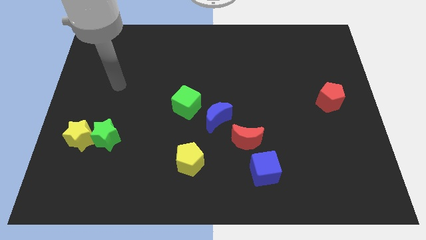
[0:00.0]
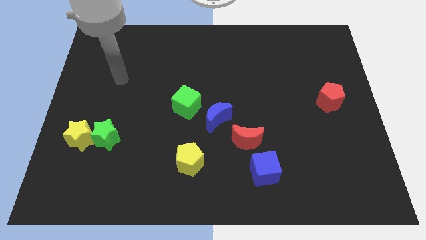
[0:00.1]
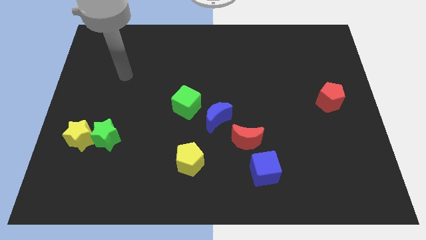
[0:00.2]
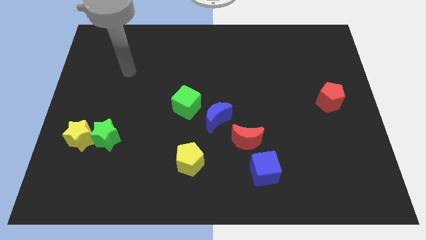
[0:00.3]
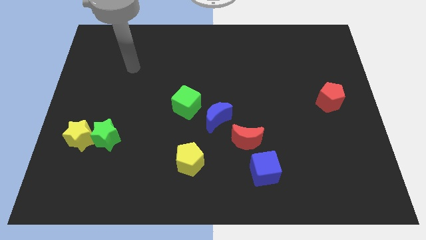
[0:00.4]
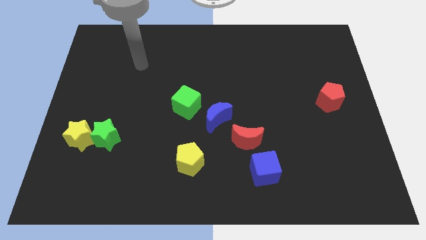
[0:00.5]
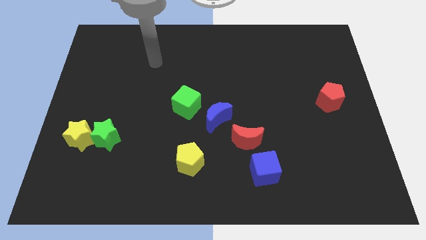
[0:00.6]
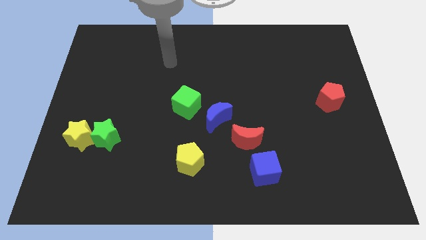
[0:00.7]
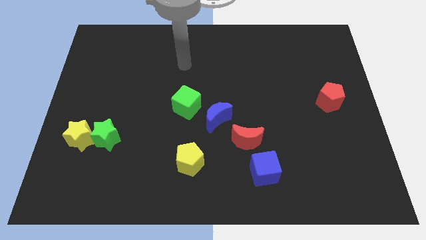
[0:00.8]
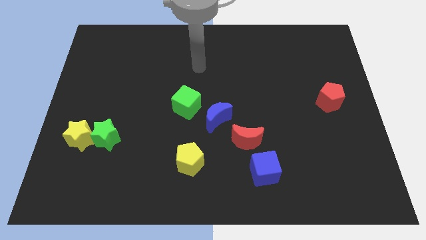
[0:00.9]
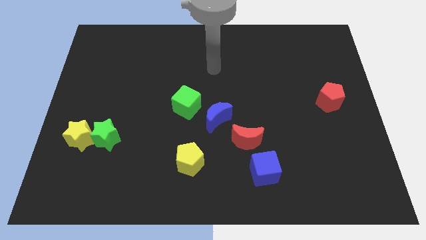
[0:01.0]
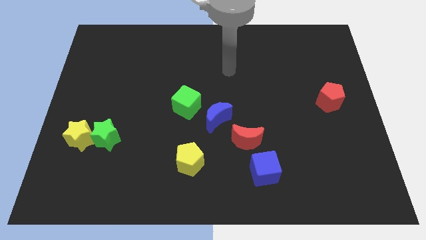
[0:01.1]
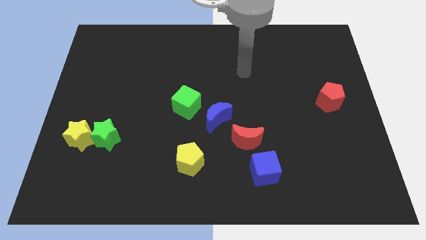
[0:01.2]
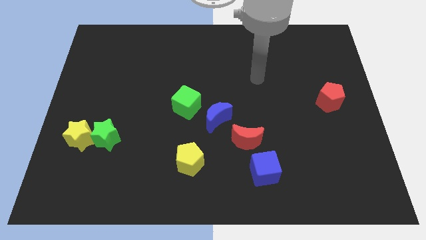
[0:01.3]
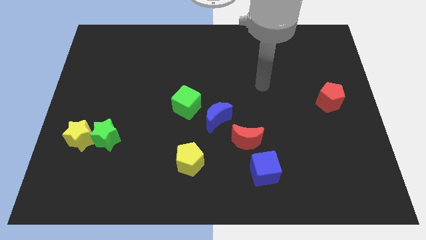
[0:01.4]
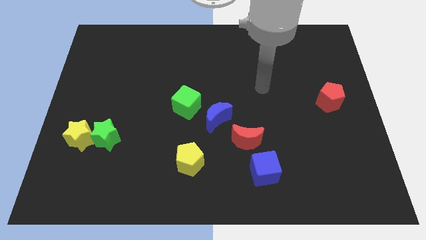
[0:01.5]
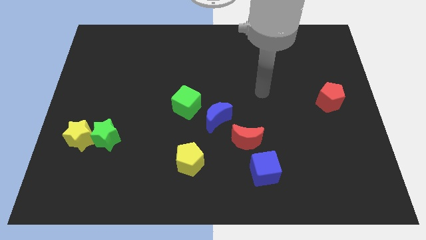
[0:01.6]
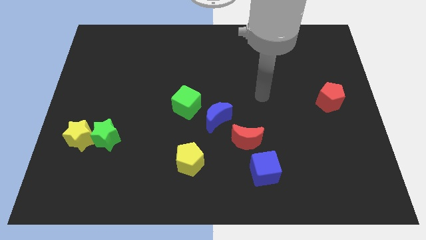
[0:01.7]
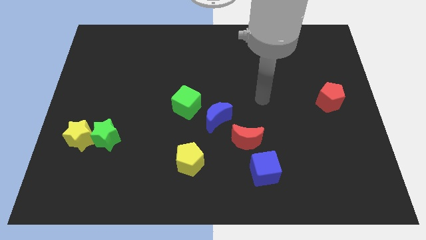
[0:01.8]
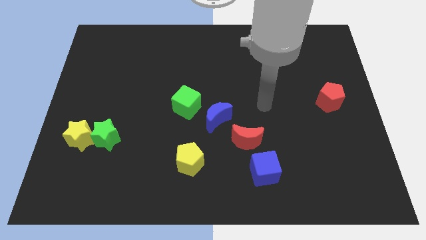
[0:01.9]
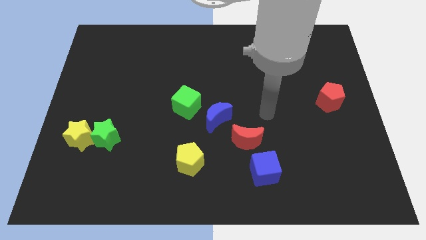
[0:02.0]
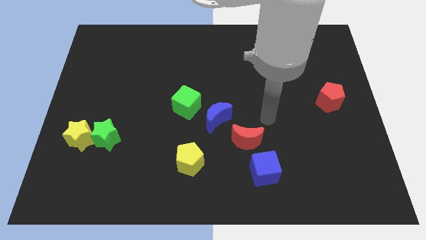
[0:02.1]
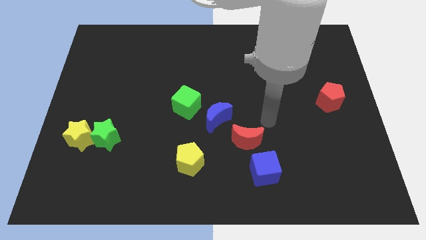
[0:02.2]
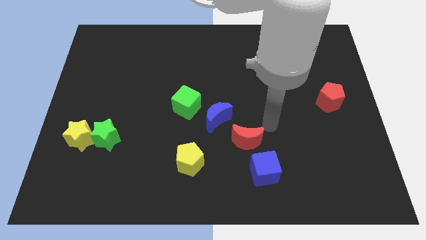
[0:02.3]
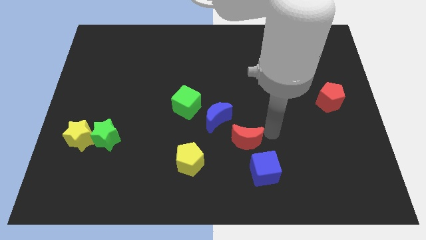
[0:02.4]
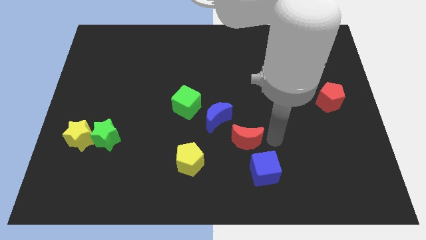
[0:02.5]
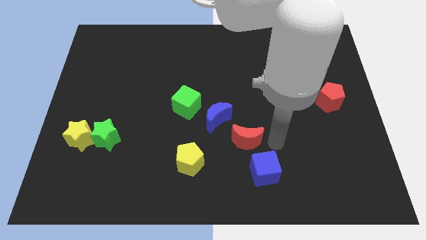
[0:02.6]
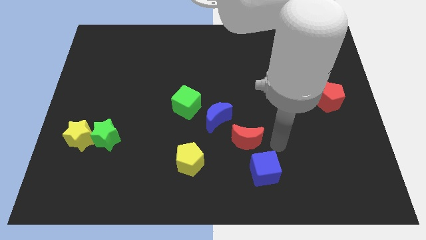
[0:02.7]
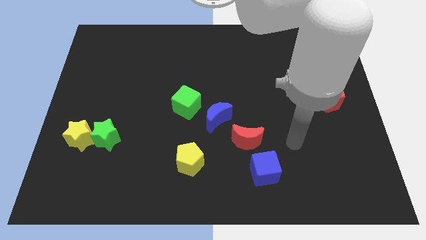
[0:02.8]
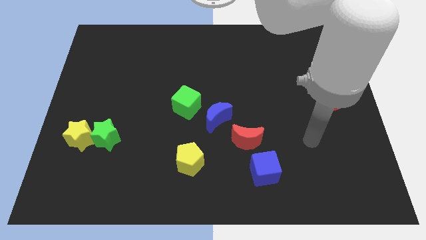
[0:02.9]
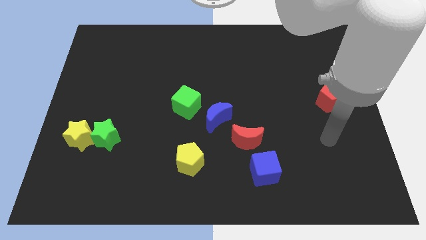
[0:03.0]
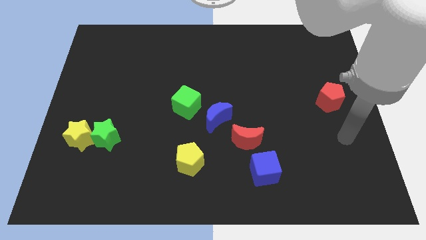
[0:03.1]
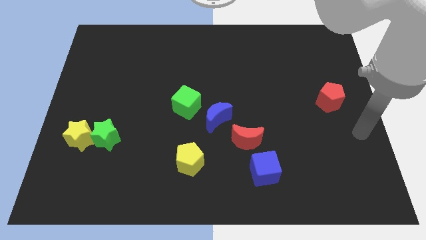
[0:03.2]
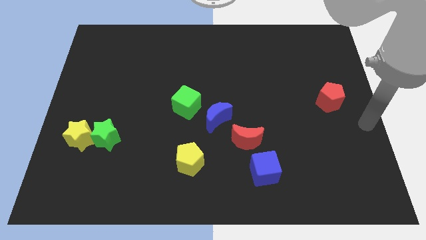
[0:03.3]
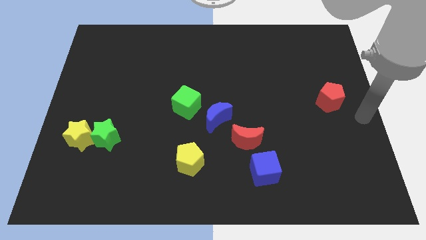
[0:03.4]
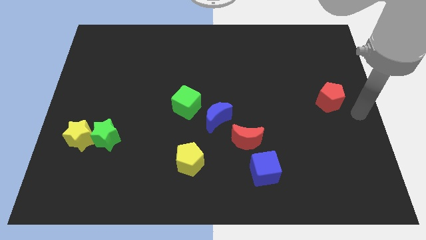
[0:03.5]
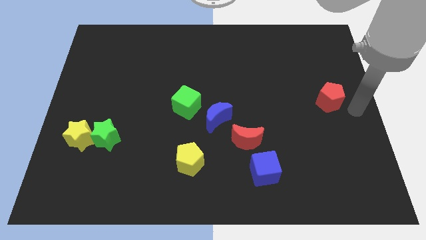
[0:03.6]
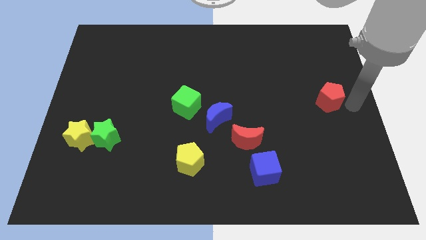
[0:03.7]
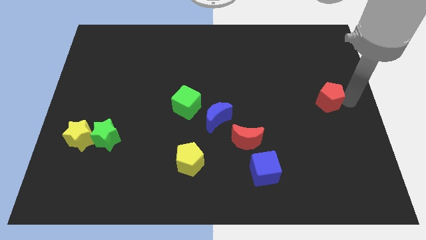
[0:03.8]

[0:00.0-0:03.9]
place the arm right to the red pentagon

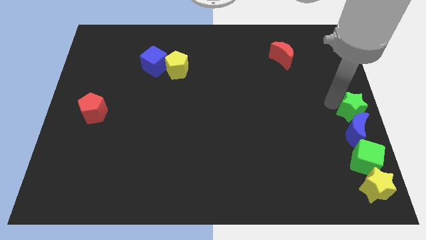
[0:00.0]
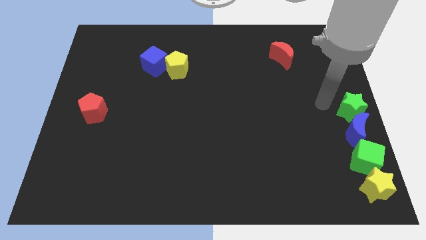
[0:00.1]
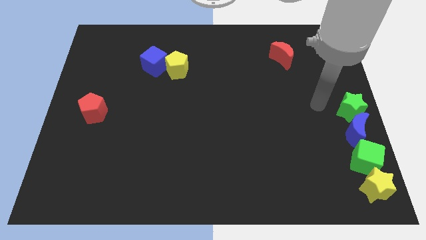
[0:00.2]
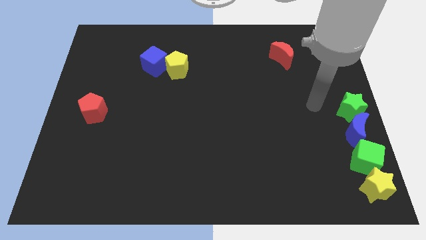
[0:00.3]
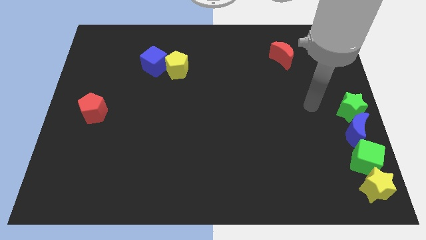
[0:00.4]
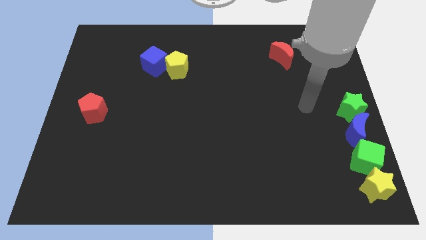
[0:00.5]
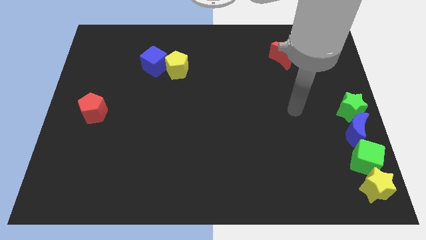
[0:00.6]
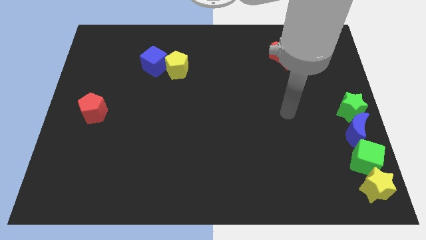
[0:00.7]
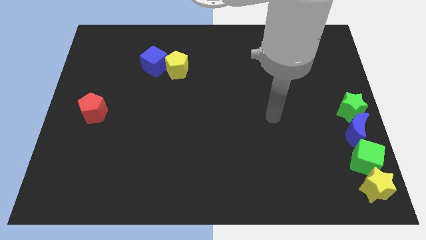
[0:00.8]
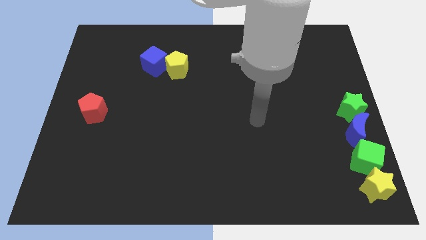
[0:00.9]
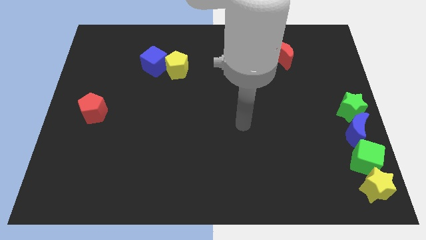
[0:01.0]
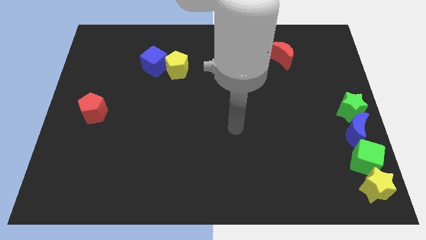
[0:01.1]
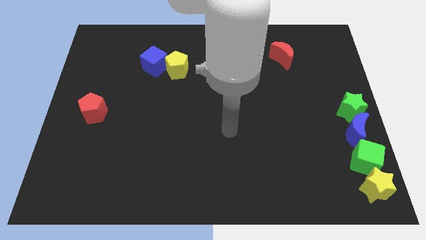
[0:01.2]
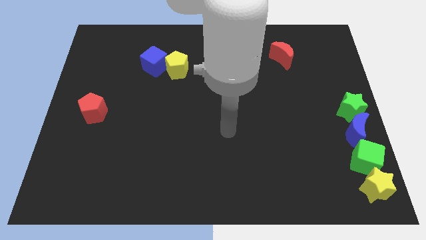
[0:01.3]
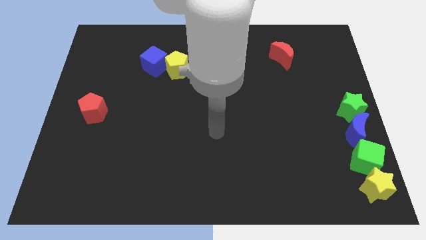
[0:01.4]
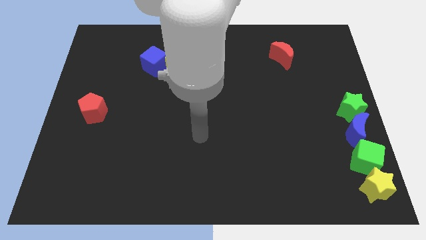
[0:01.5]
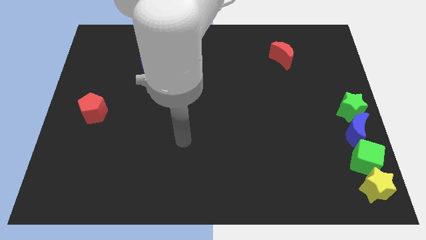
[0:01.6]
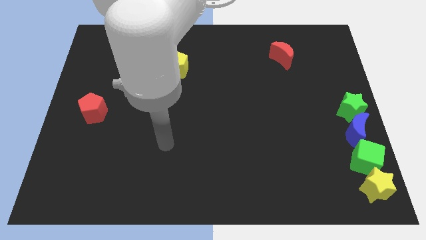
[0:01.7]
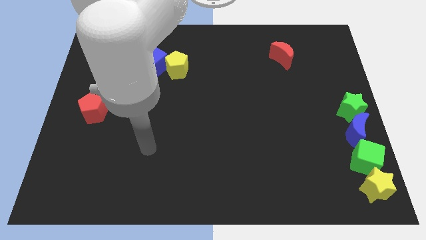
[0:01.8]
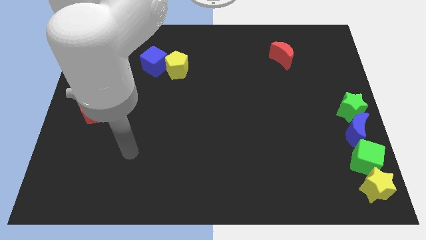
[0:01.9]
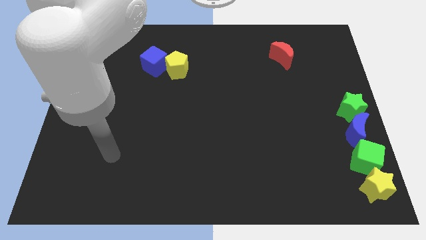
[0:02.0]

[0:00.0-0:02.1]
move your arm away from green star

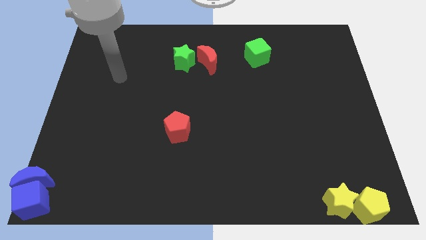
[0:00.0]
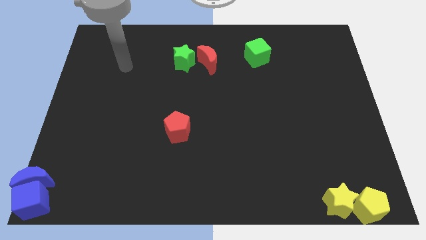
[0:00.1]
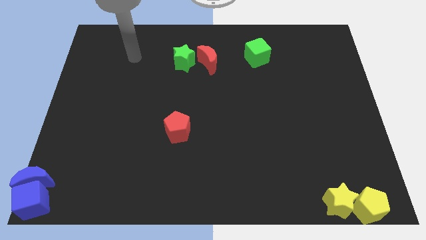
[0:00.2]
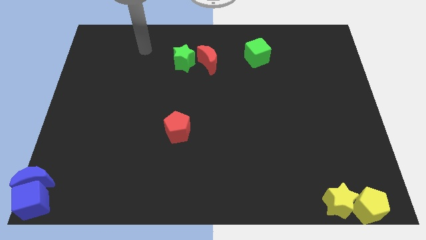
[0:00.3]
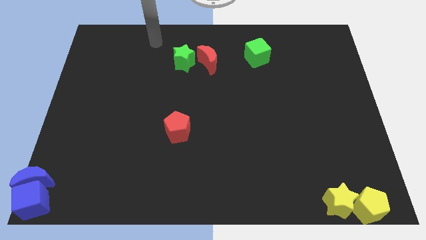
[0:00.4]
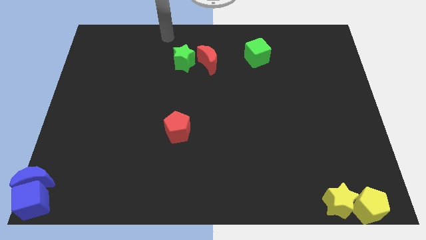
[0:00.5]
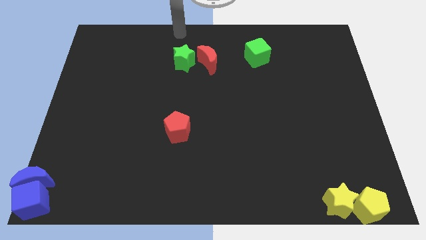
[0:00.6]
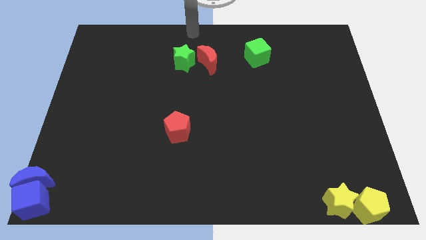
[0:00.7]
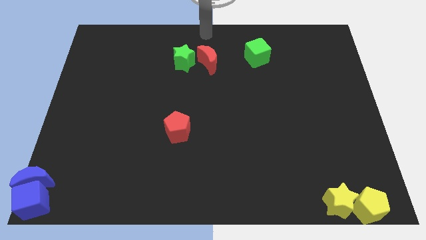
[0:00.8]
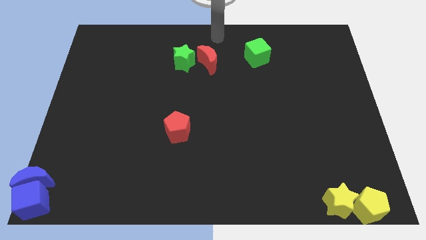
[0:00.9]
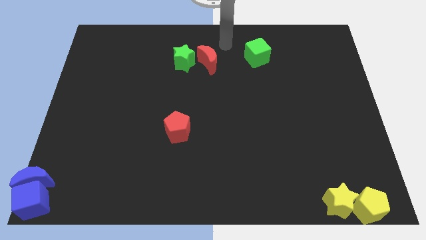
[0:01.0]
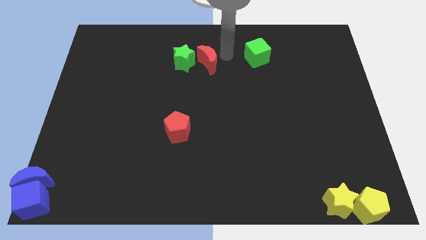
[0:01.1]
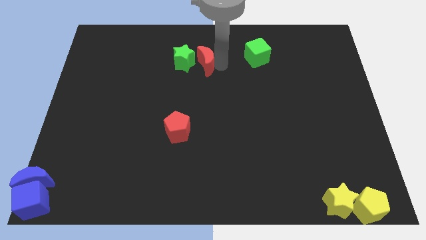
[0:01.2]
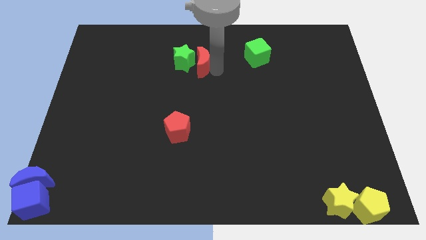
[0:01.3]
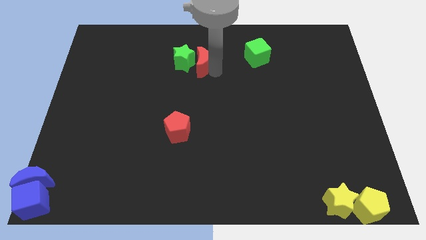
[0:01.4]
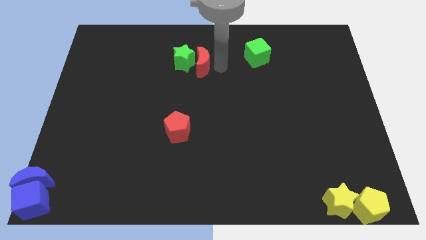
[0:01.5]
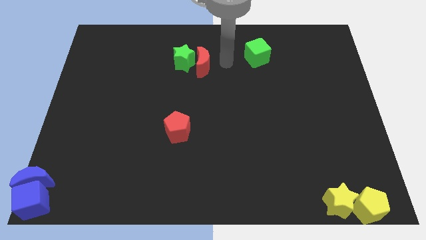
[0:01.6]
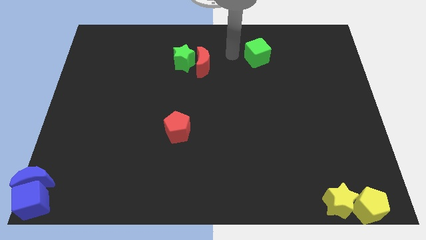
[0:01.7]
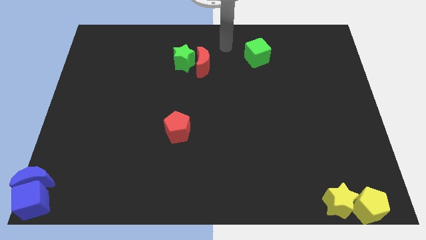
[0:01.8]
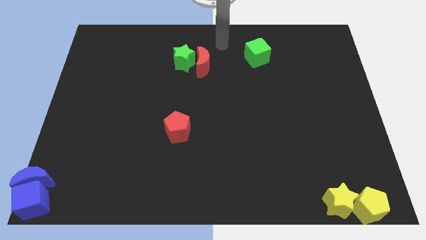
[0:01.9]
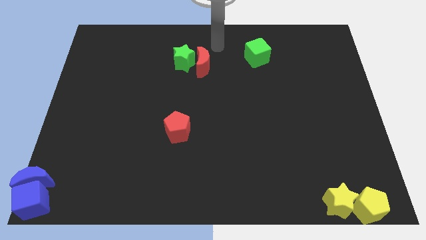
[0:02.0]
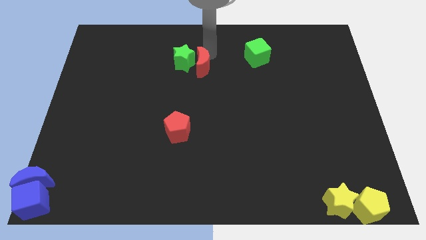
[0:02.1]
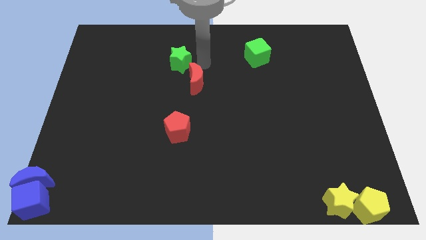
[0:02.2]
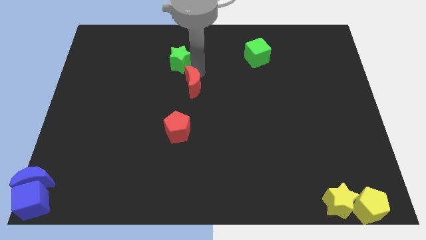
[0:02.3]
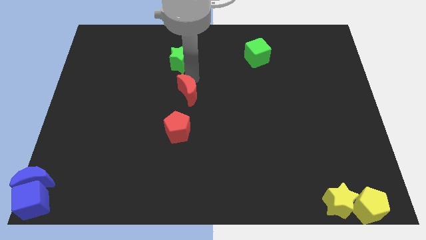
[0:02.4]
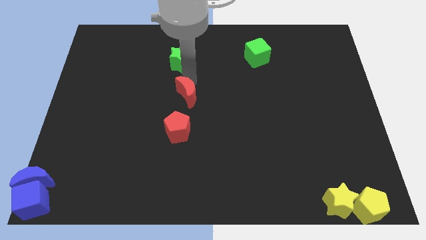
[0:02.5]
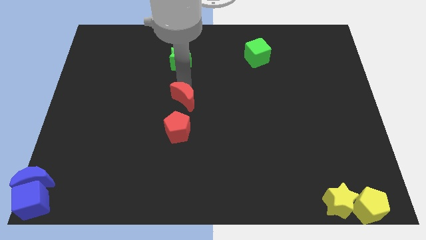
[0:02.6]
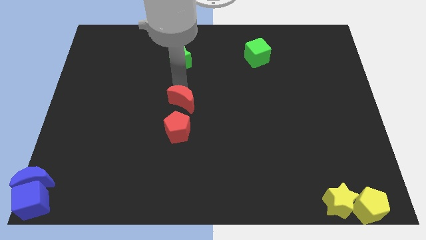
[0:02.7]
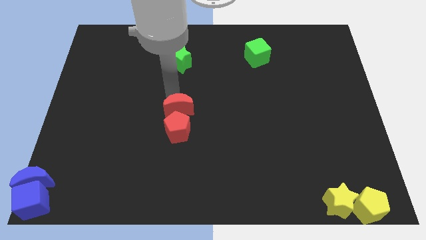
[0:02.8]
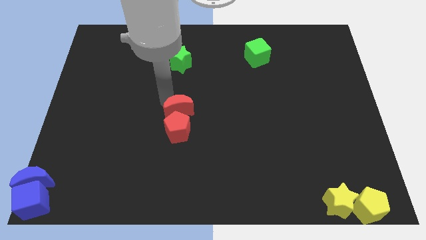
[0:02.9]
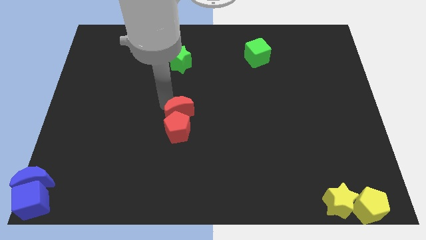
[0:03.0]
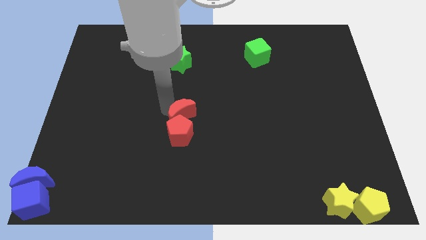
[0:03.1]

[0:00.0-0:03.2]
separate red crescent from the green star

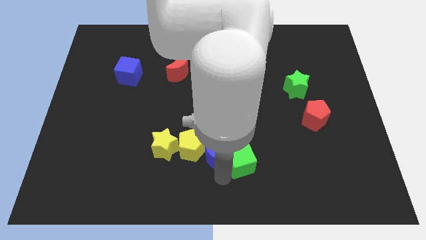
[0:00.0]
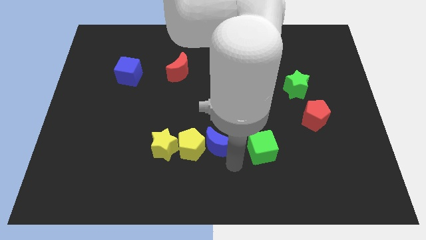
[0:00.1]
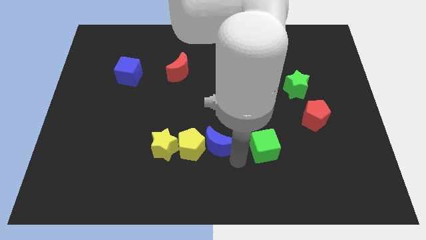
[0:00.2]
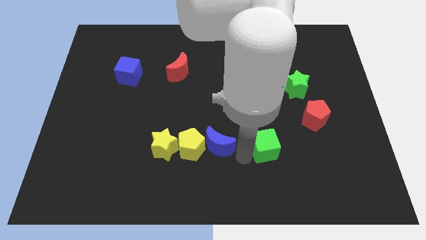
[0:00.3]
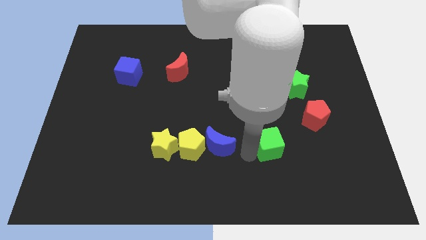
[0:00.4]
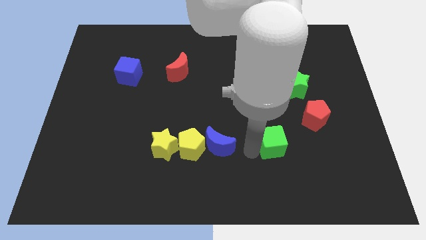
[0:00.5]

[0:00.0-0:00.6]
separate blue moon and green cube
